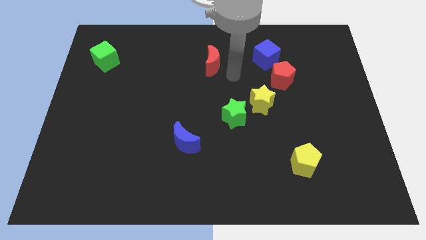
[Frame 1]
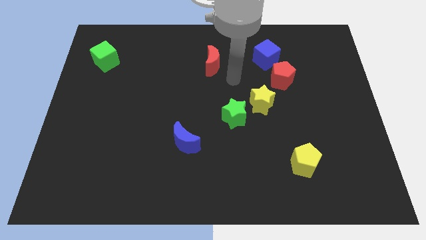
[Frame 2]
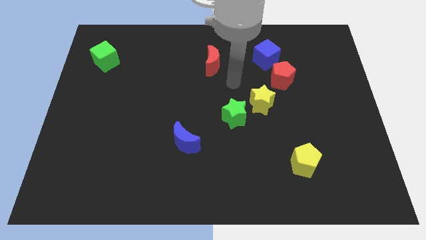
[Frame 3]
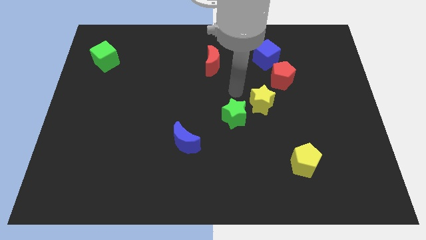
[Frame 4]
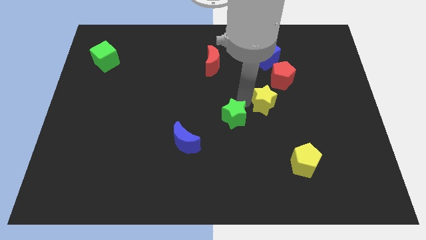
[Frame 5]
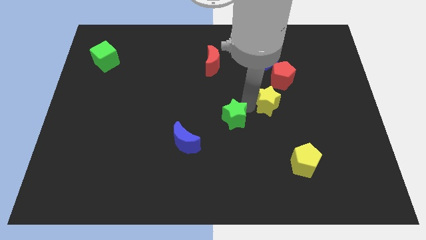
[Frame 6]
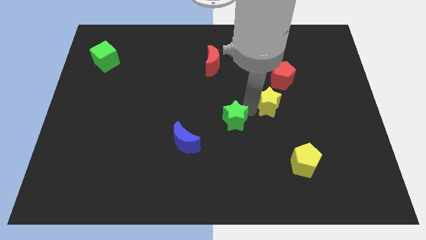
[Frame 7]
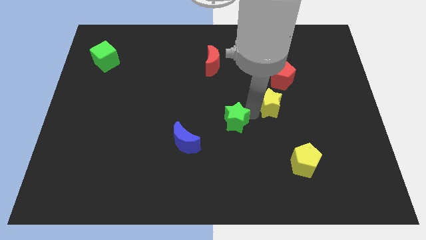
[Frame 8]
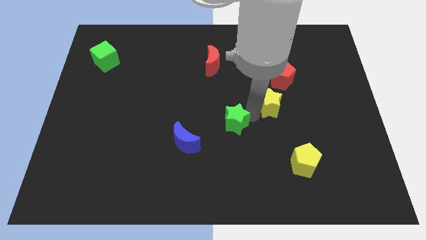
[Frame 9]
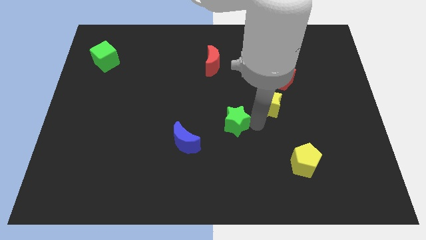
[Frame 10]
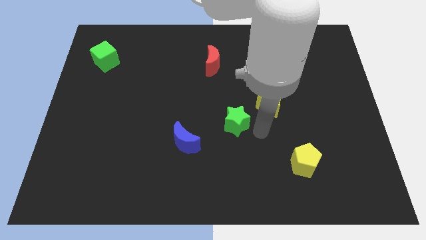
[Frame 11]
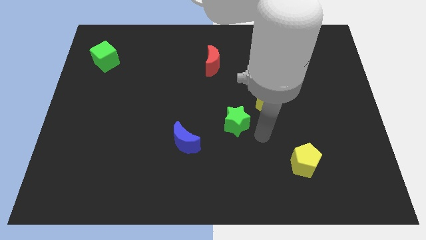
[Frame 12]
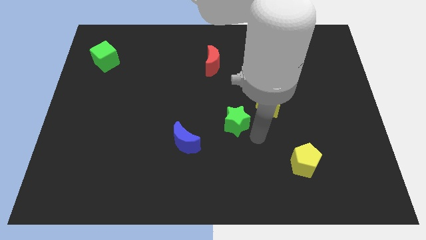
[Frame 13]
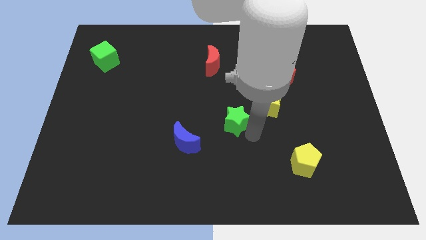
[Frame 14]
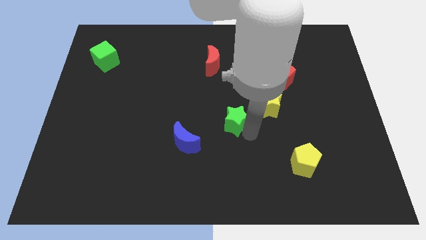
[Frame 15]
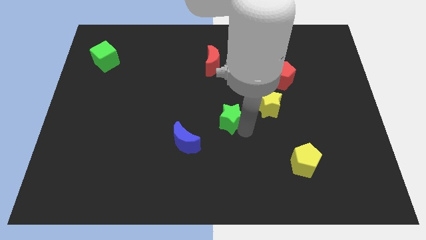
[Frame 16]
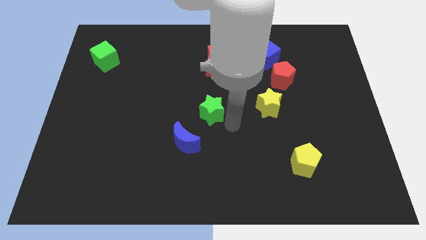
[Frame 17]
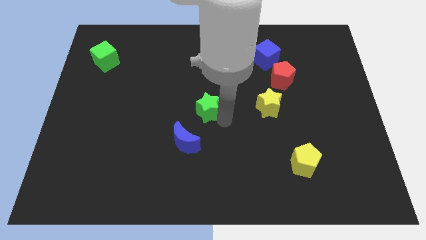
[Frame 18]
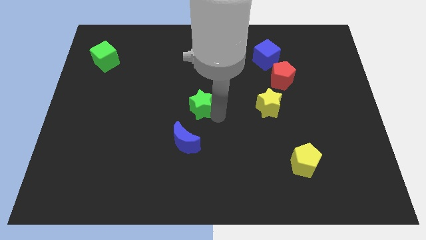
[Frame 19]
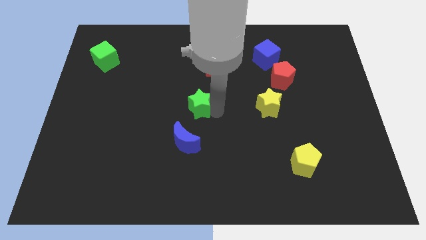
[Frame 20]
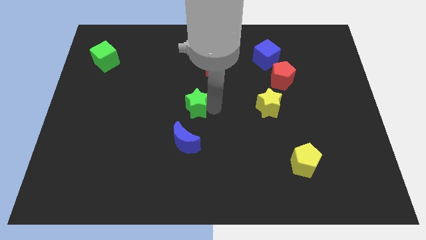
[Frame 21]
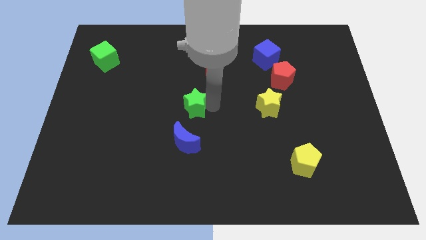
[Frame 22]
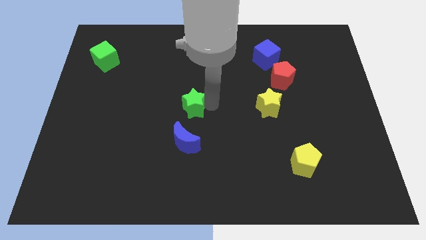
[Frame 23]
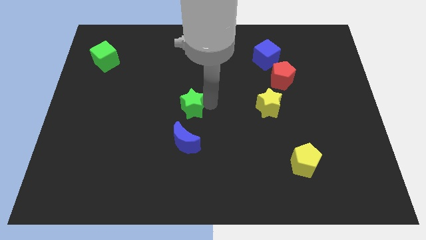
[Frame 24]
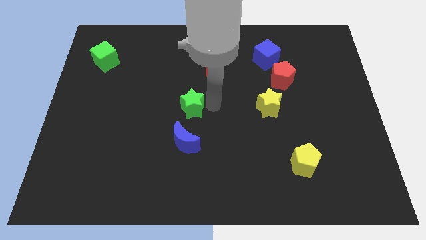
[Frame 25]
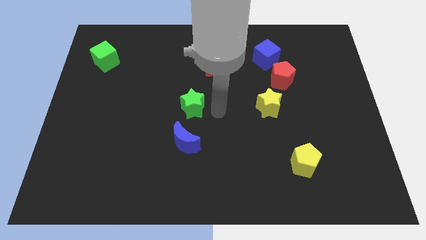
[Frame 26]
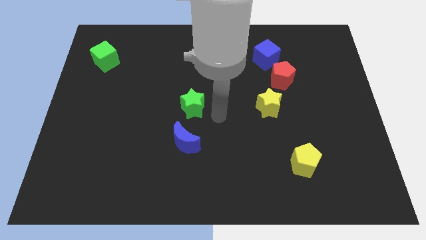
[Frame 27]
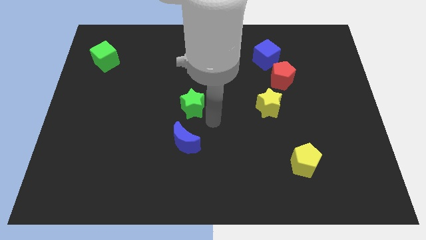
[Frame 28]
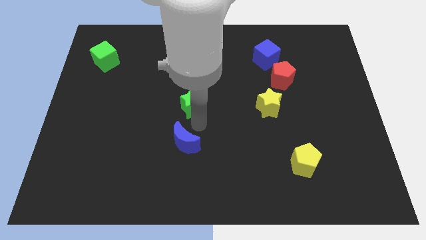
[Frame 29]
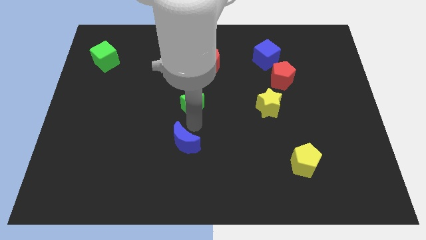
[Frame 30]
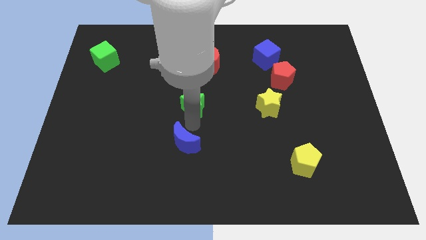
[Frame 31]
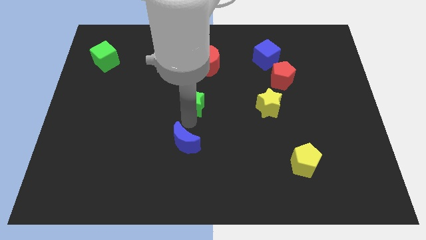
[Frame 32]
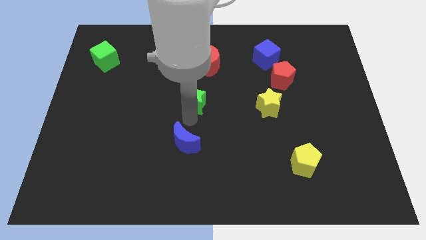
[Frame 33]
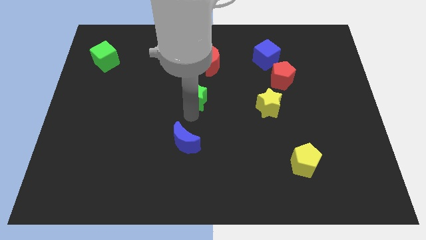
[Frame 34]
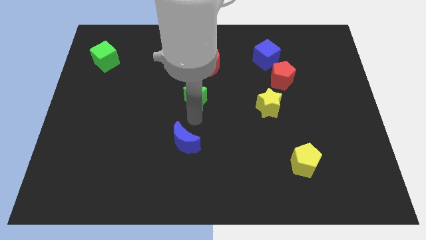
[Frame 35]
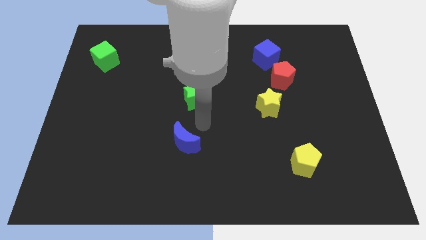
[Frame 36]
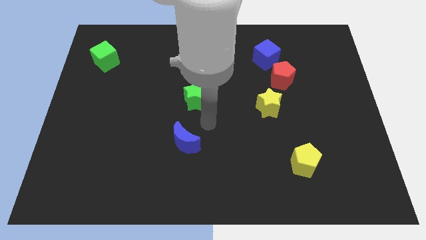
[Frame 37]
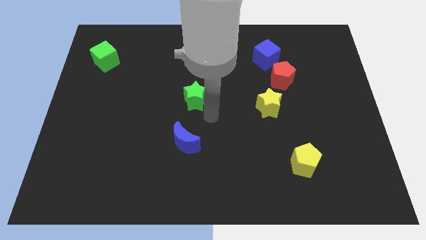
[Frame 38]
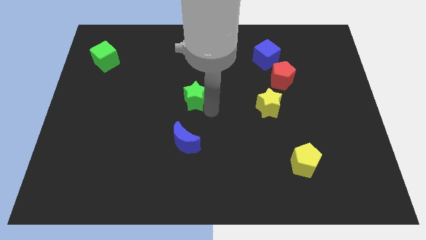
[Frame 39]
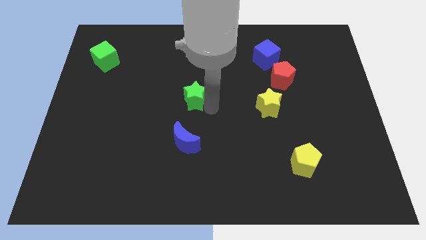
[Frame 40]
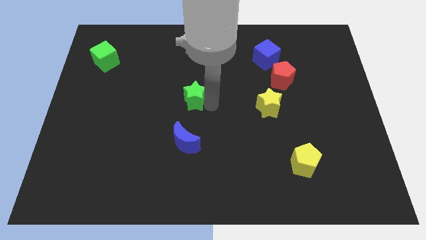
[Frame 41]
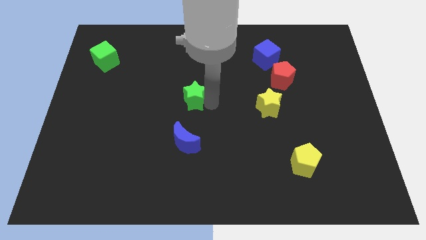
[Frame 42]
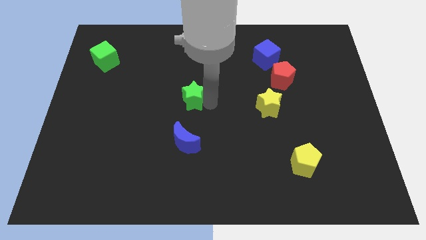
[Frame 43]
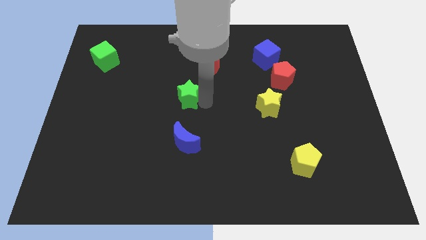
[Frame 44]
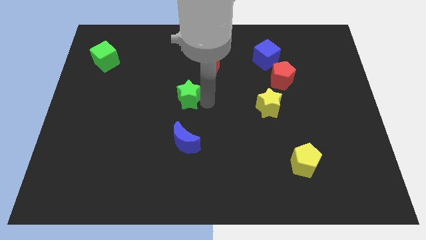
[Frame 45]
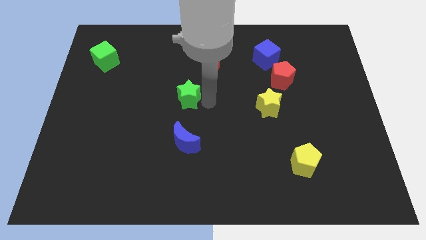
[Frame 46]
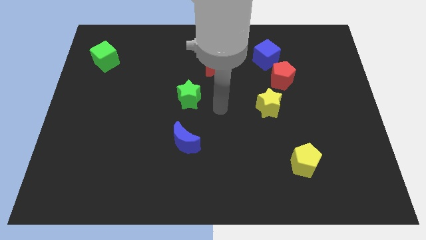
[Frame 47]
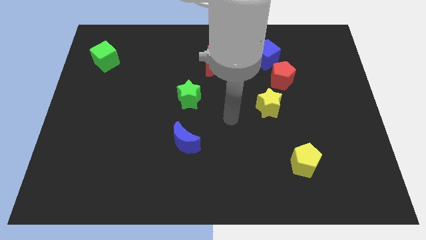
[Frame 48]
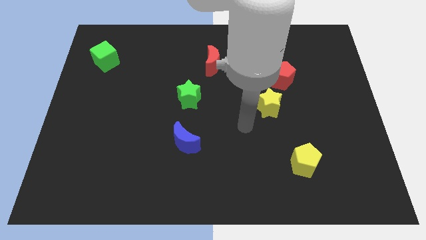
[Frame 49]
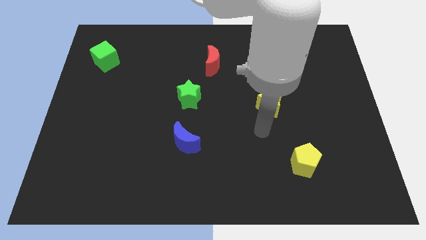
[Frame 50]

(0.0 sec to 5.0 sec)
separate green star from the yellow star

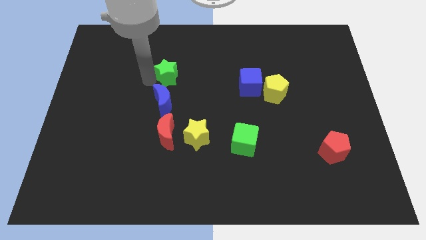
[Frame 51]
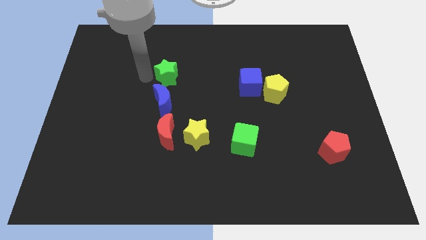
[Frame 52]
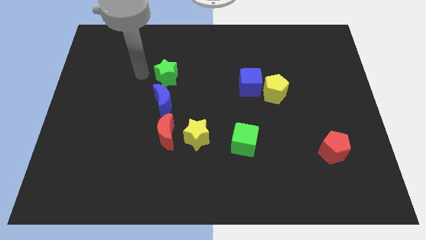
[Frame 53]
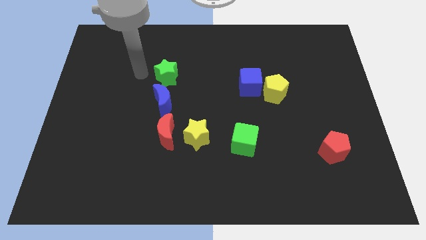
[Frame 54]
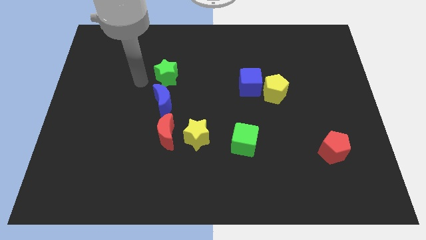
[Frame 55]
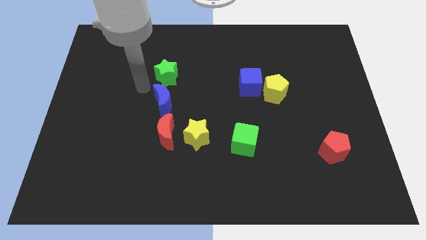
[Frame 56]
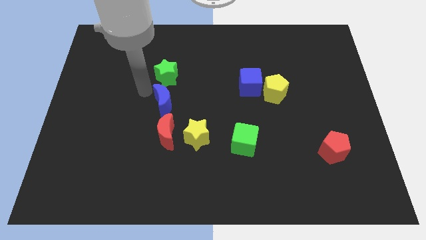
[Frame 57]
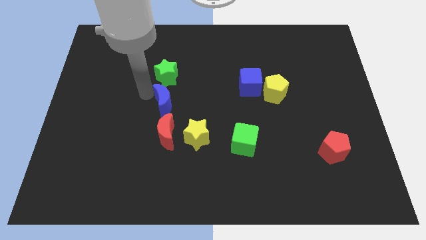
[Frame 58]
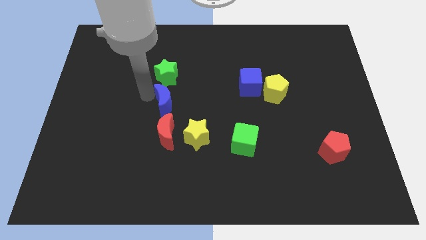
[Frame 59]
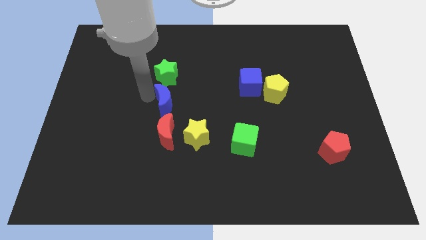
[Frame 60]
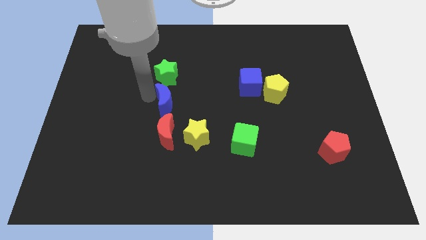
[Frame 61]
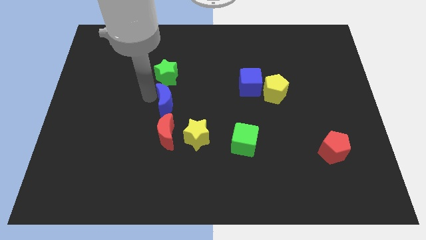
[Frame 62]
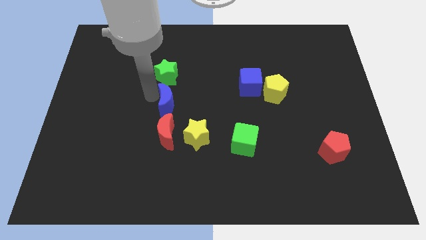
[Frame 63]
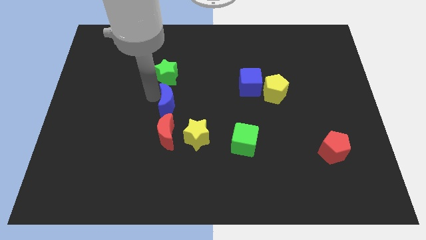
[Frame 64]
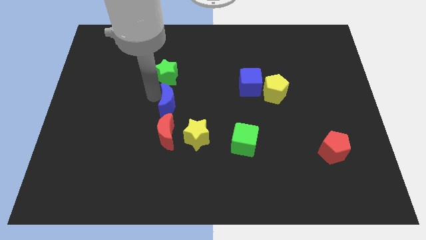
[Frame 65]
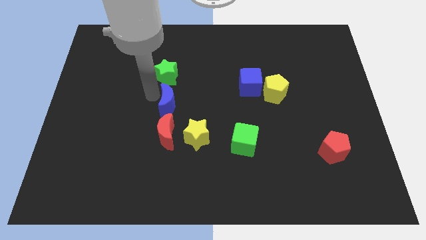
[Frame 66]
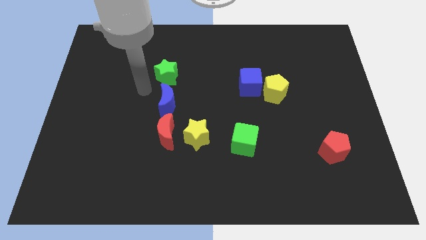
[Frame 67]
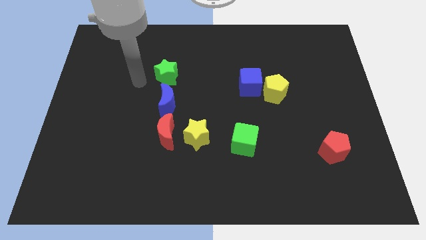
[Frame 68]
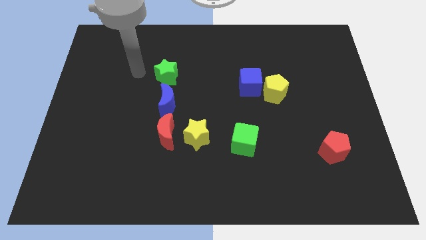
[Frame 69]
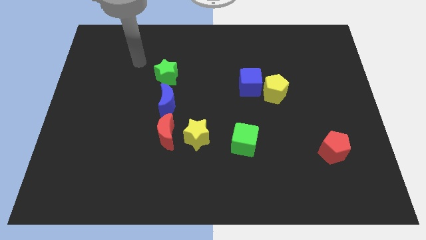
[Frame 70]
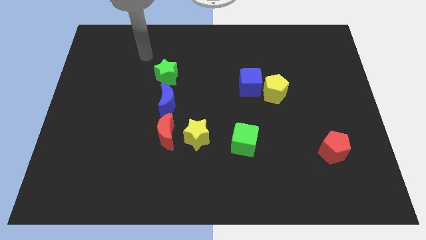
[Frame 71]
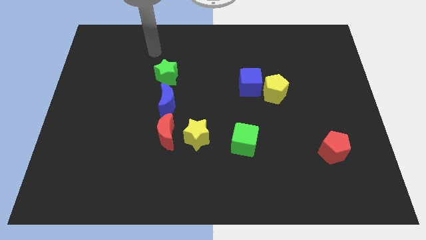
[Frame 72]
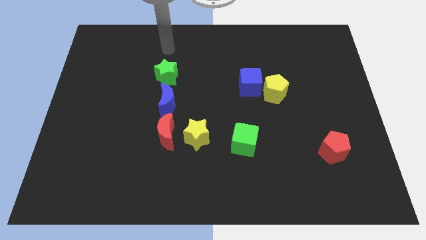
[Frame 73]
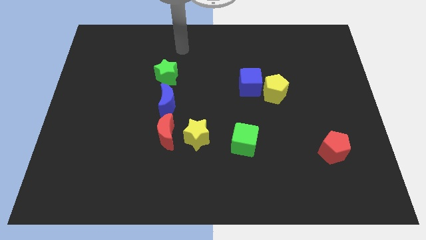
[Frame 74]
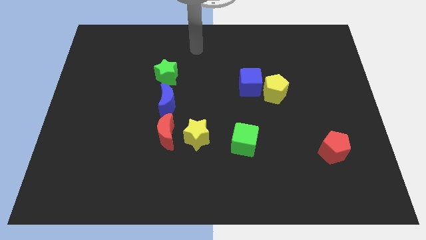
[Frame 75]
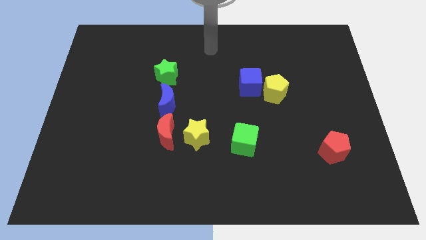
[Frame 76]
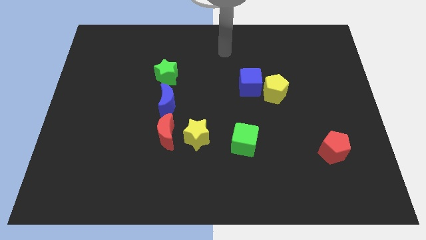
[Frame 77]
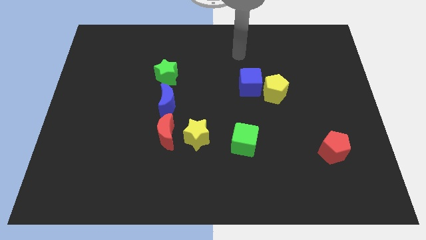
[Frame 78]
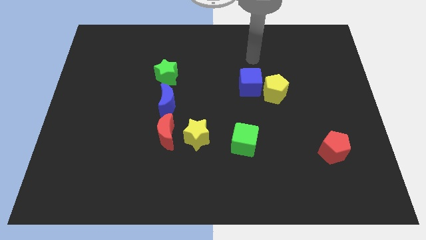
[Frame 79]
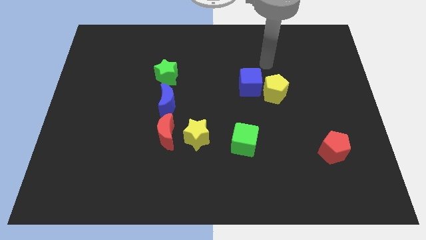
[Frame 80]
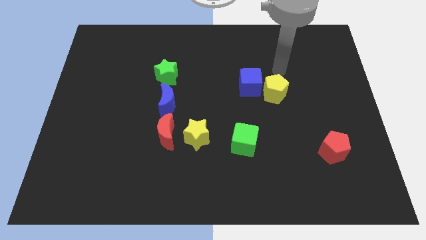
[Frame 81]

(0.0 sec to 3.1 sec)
move the blue crescent slightly to the center of the board

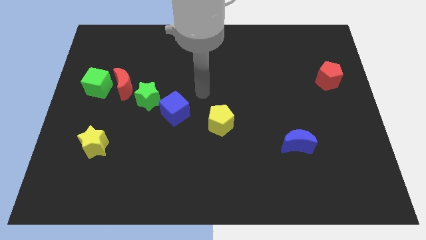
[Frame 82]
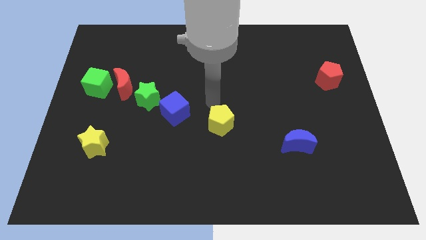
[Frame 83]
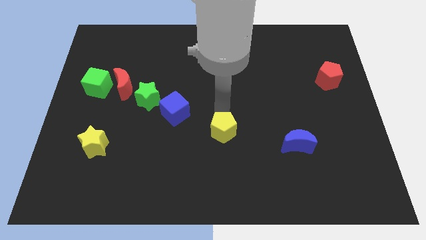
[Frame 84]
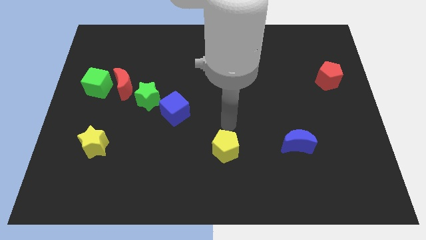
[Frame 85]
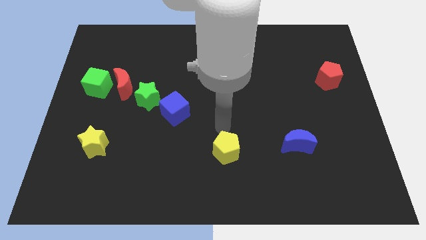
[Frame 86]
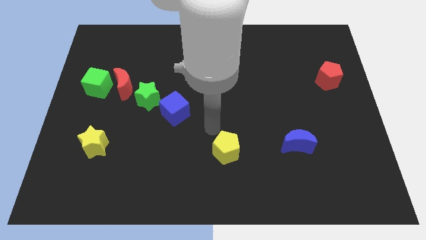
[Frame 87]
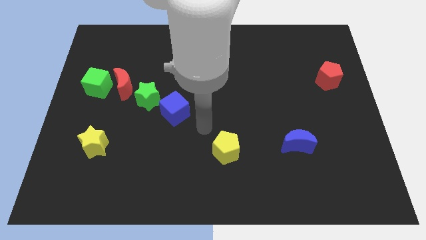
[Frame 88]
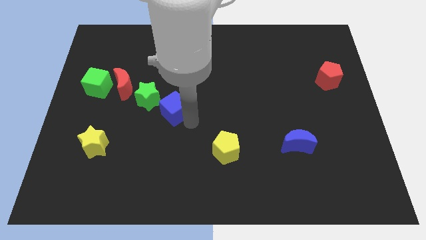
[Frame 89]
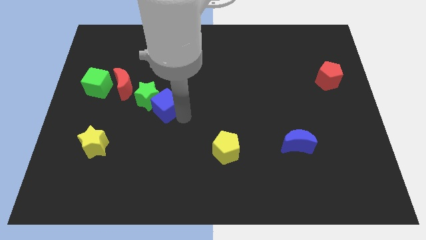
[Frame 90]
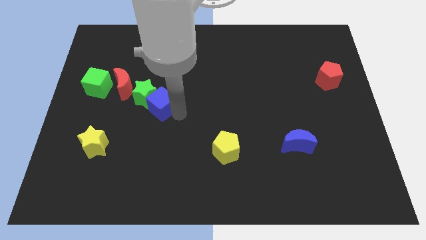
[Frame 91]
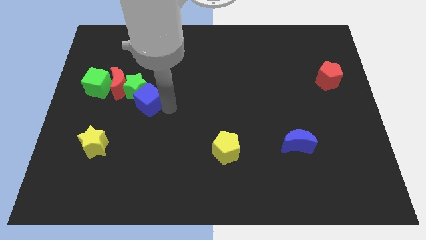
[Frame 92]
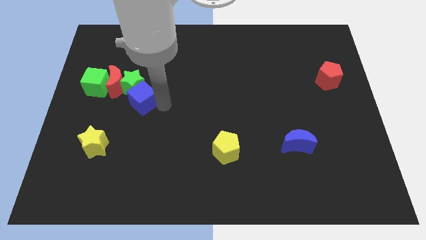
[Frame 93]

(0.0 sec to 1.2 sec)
push the blue cube into the green star
